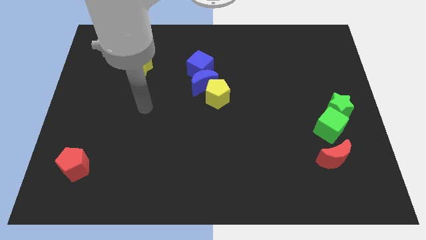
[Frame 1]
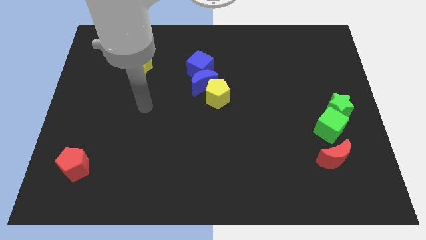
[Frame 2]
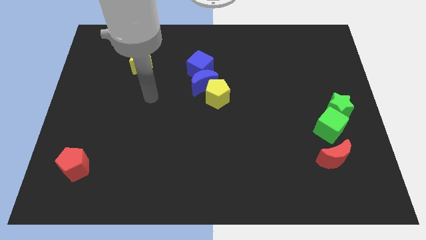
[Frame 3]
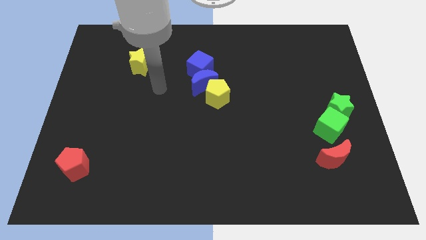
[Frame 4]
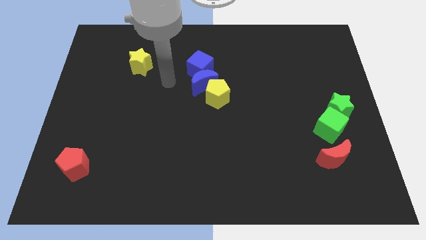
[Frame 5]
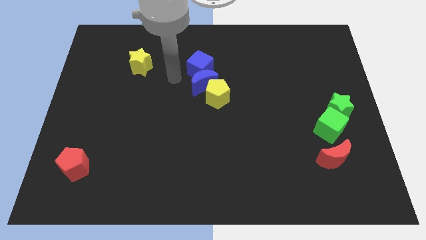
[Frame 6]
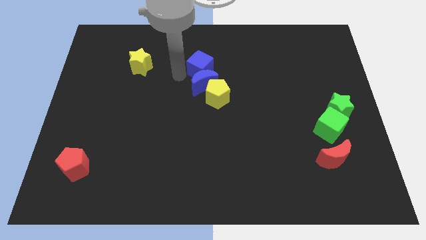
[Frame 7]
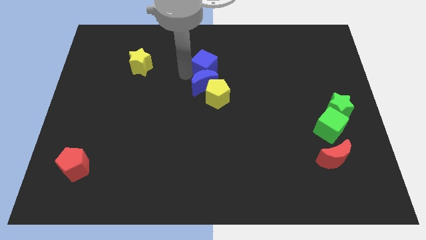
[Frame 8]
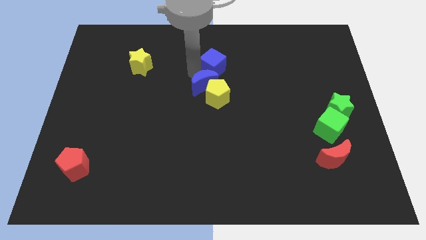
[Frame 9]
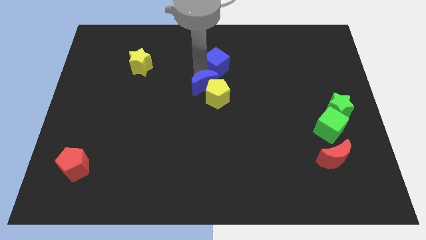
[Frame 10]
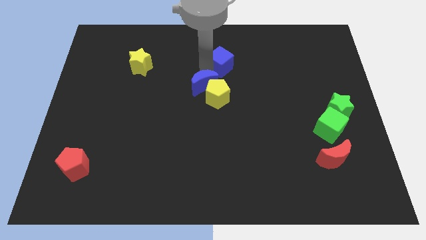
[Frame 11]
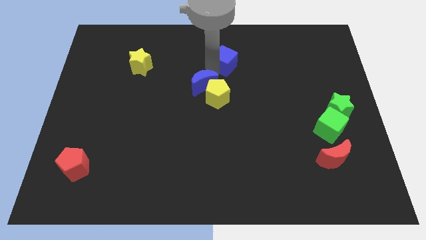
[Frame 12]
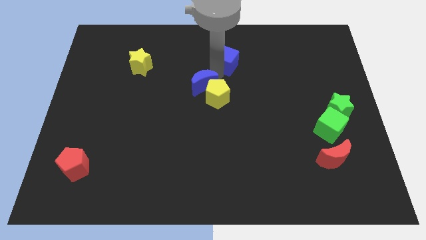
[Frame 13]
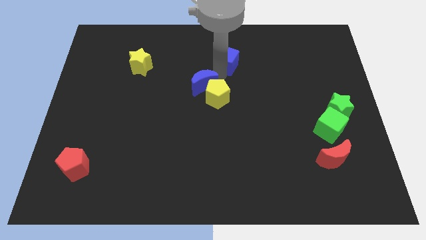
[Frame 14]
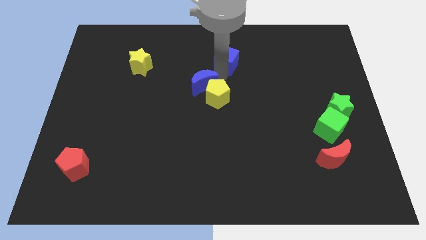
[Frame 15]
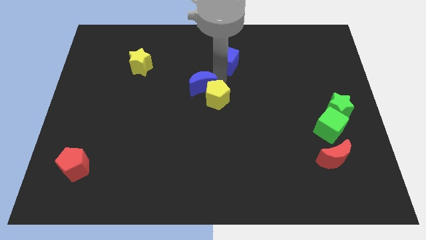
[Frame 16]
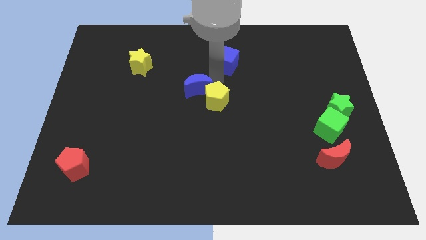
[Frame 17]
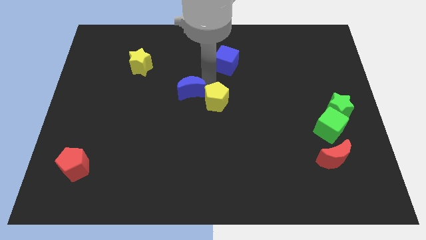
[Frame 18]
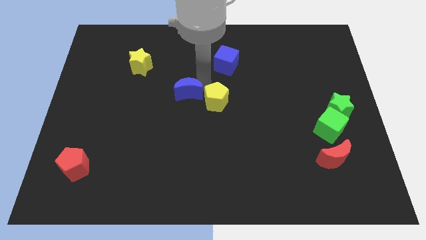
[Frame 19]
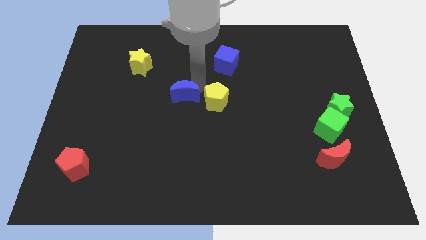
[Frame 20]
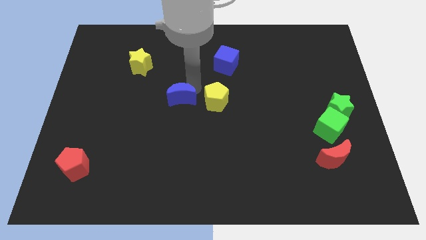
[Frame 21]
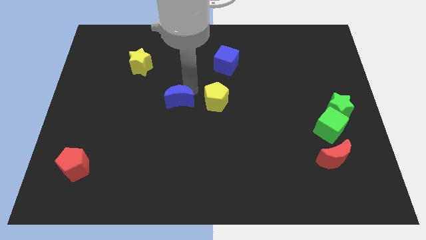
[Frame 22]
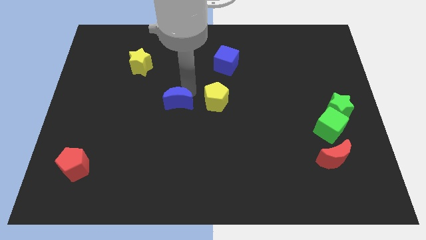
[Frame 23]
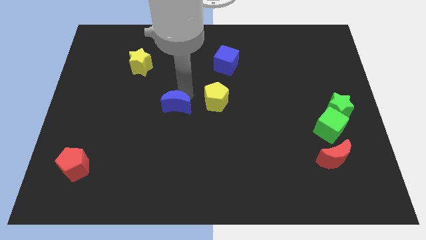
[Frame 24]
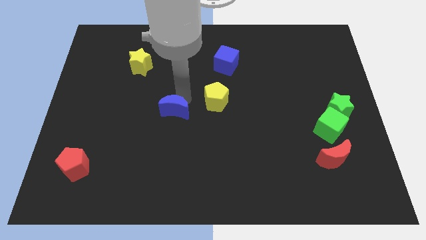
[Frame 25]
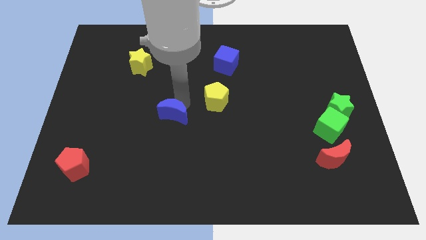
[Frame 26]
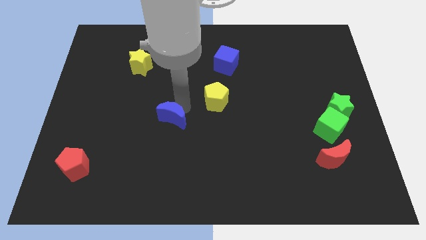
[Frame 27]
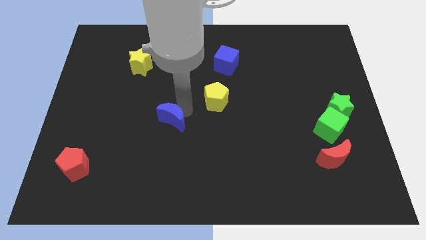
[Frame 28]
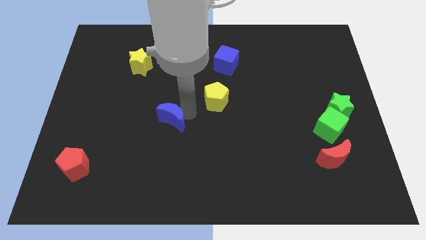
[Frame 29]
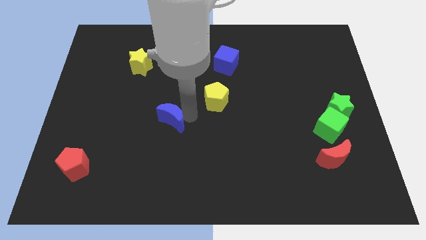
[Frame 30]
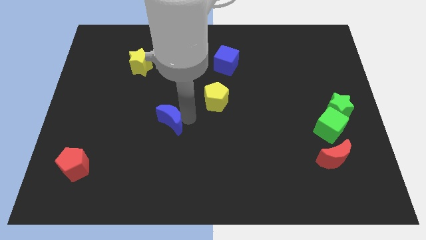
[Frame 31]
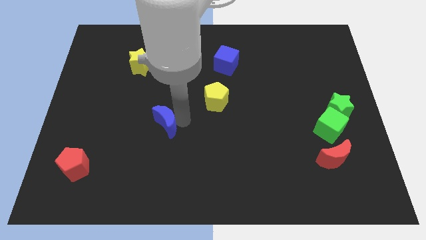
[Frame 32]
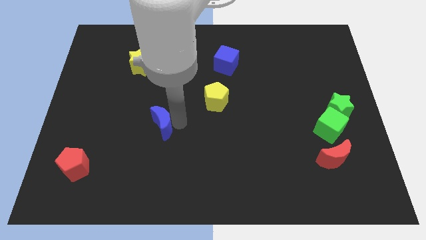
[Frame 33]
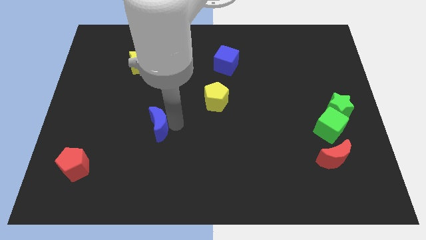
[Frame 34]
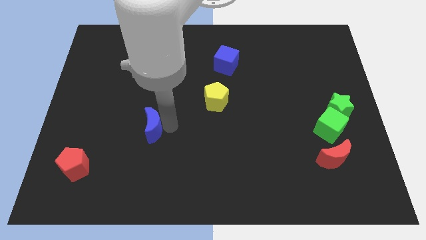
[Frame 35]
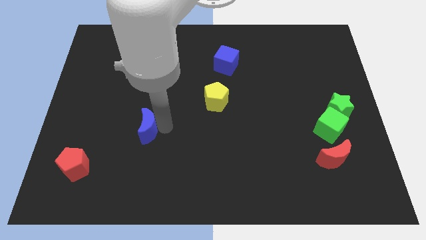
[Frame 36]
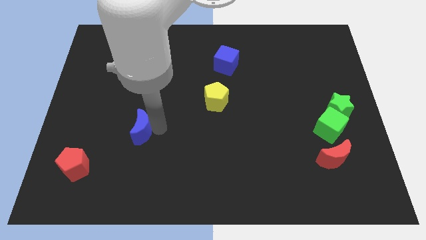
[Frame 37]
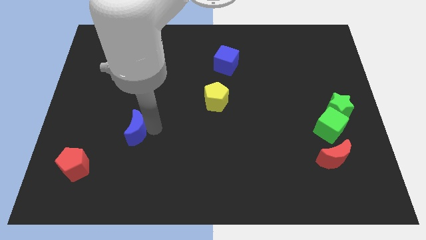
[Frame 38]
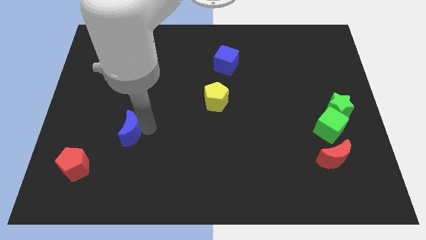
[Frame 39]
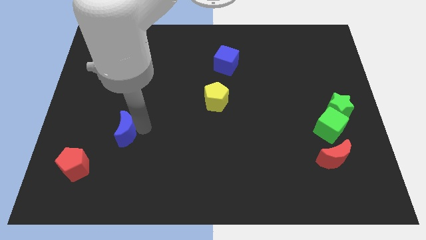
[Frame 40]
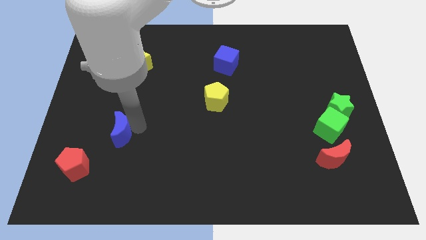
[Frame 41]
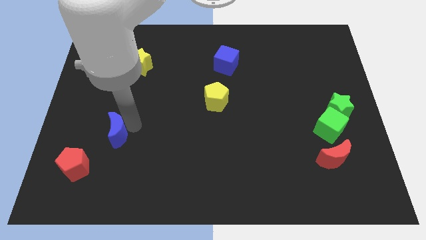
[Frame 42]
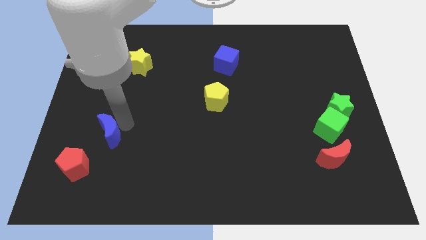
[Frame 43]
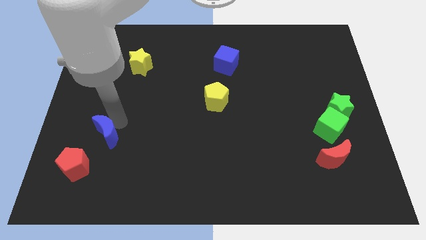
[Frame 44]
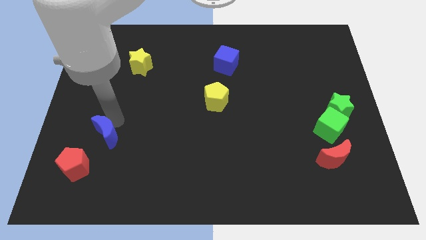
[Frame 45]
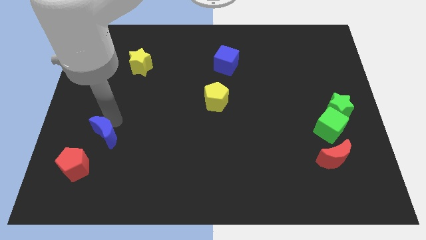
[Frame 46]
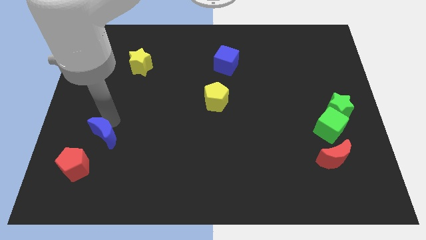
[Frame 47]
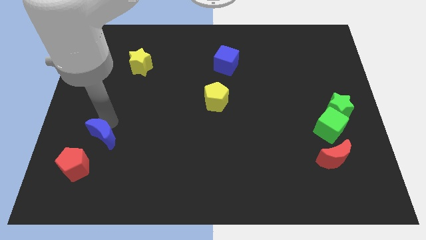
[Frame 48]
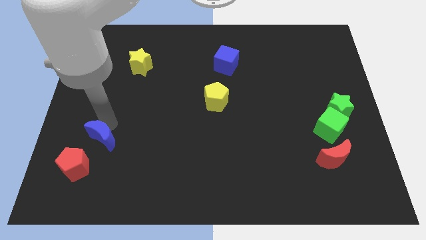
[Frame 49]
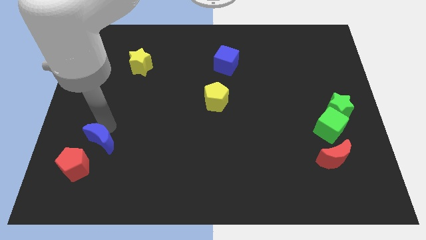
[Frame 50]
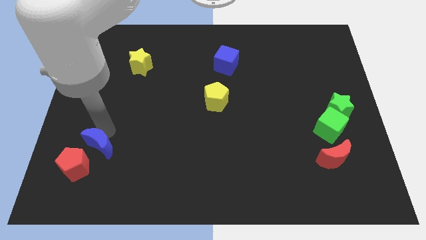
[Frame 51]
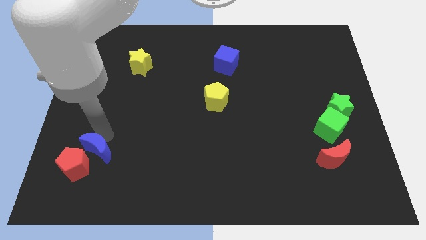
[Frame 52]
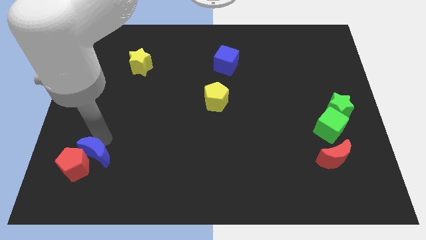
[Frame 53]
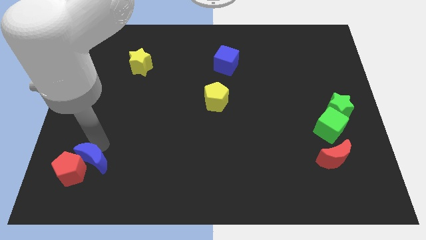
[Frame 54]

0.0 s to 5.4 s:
move the blue moon towards the red pentagon

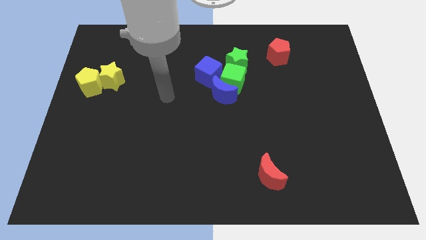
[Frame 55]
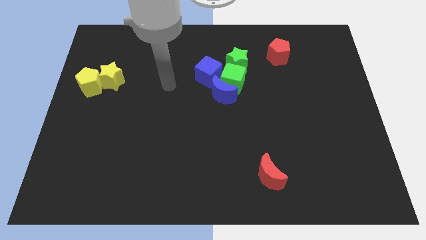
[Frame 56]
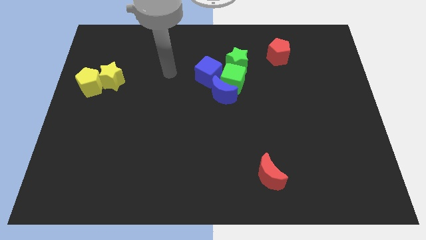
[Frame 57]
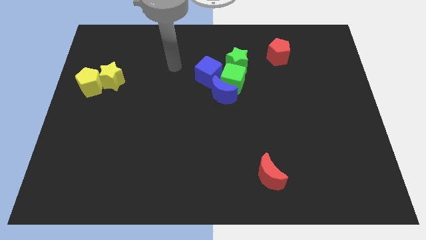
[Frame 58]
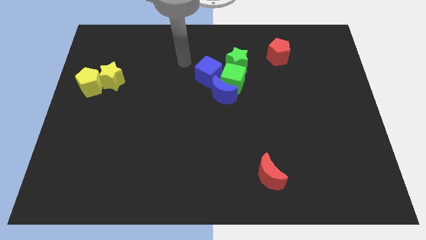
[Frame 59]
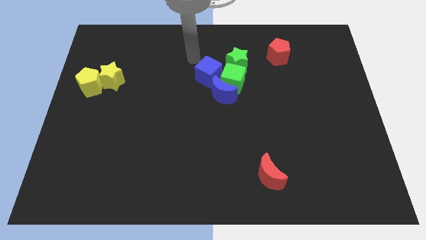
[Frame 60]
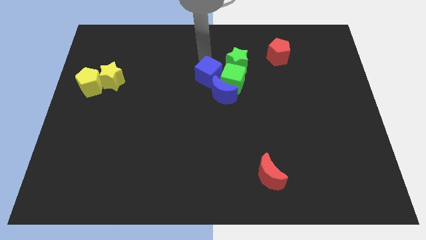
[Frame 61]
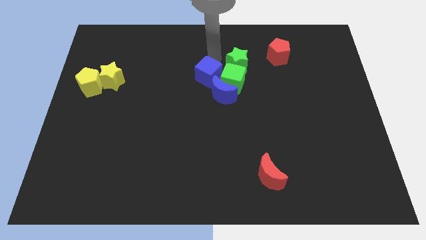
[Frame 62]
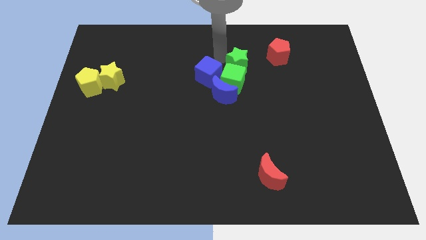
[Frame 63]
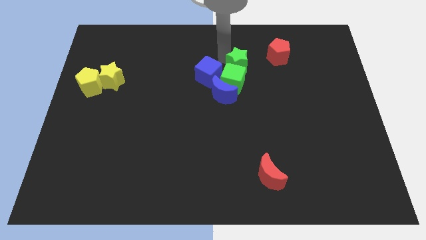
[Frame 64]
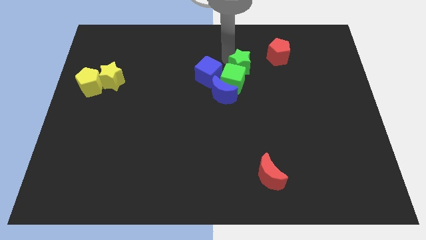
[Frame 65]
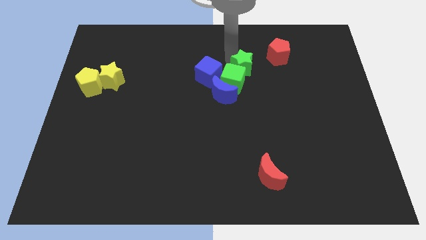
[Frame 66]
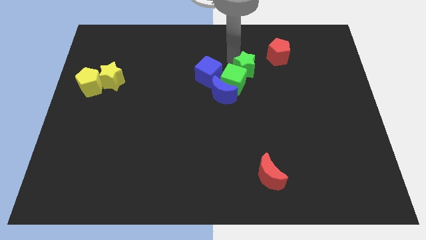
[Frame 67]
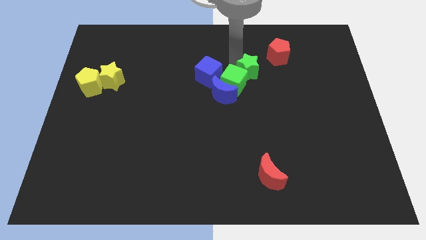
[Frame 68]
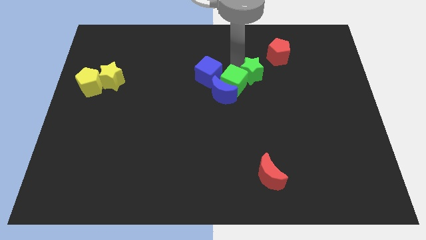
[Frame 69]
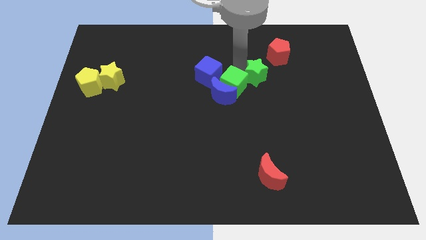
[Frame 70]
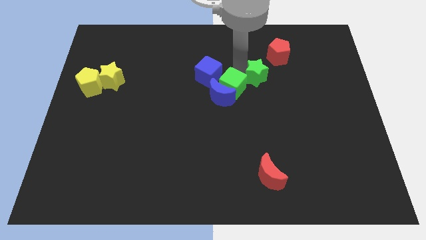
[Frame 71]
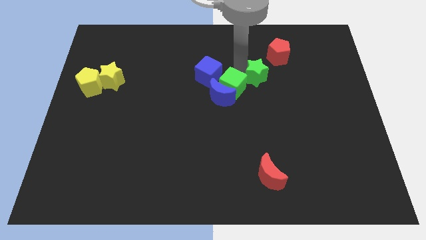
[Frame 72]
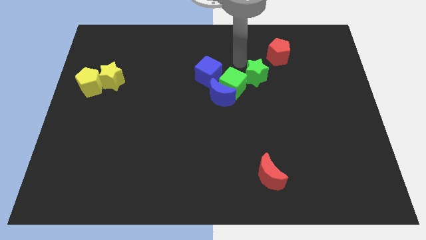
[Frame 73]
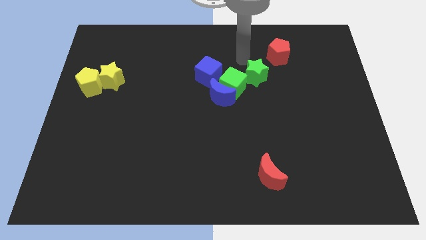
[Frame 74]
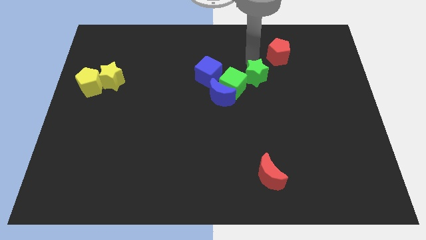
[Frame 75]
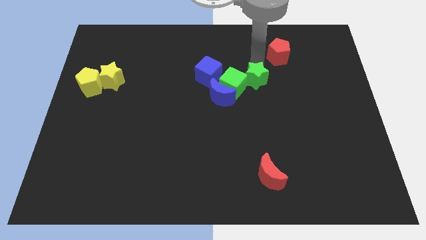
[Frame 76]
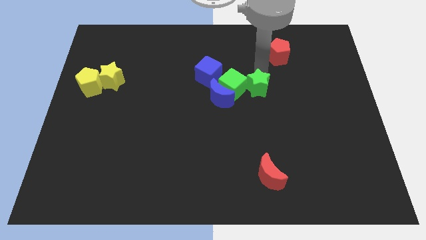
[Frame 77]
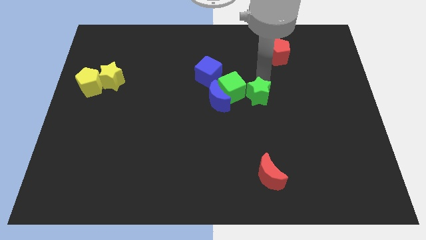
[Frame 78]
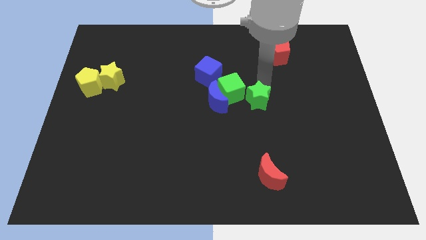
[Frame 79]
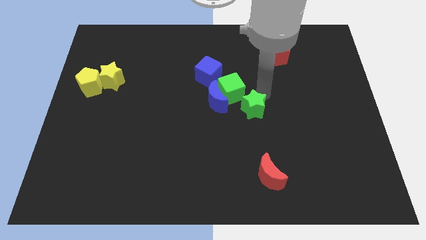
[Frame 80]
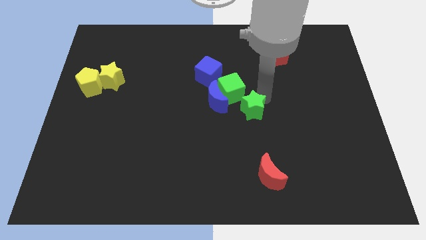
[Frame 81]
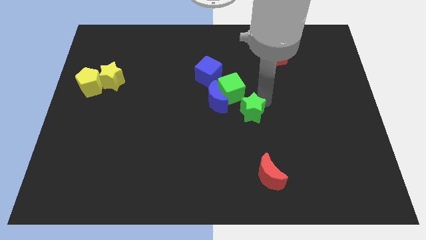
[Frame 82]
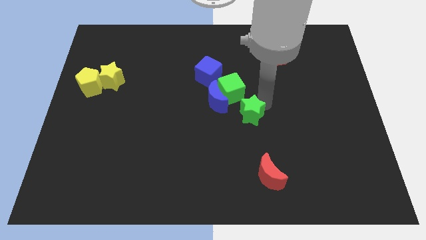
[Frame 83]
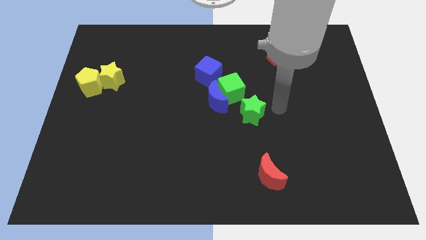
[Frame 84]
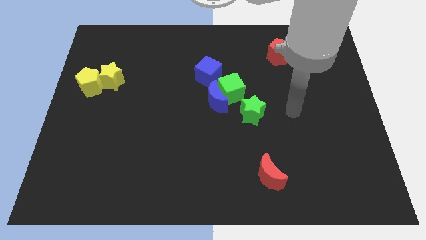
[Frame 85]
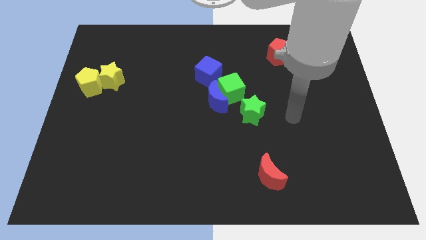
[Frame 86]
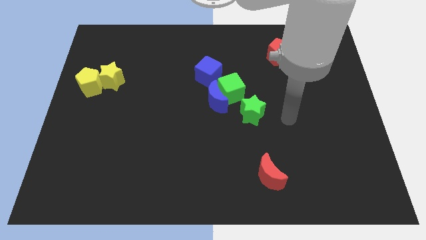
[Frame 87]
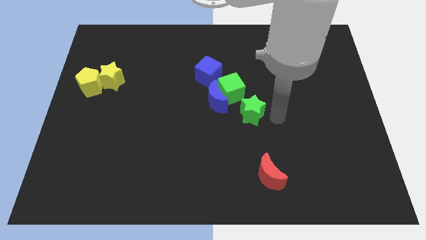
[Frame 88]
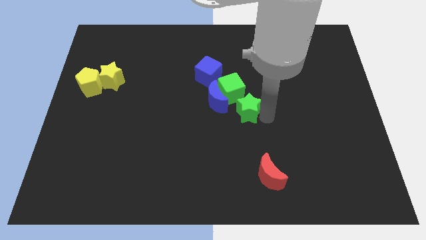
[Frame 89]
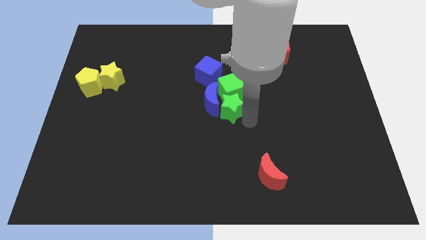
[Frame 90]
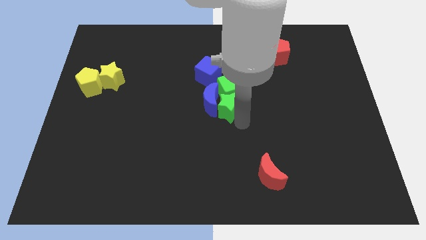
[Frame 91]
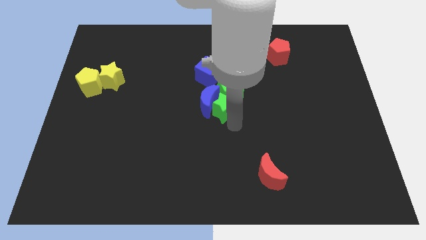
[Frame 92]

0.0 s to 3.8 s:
move the green star to the blue moon
